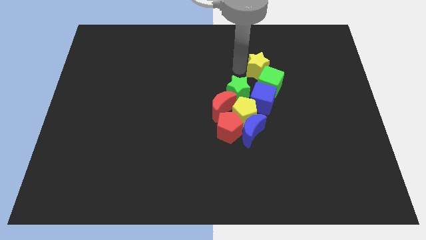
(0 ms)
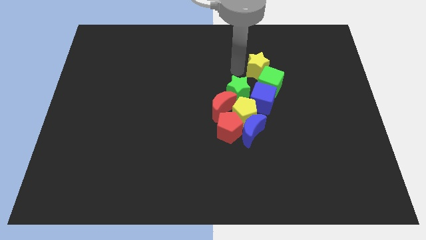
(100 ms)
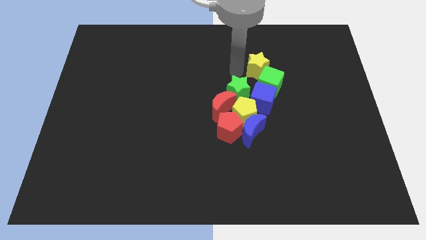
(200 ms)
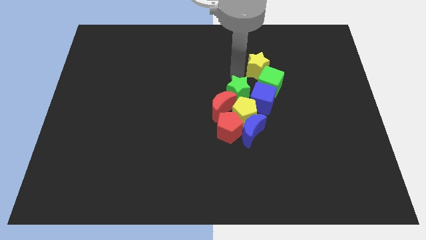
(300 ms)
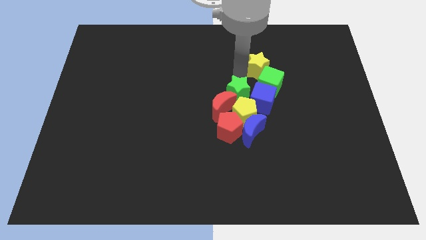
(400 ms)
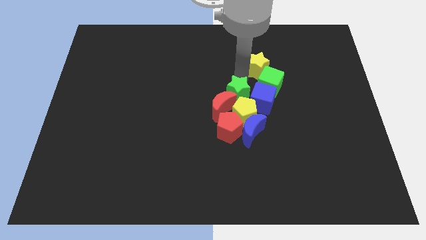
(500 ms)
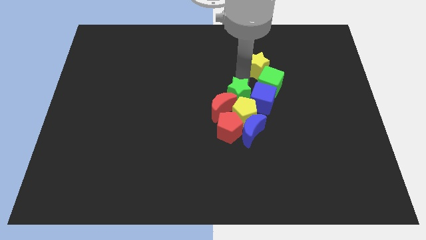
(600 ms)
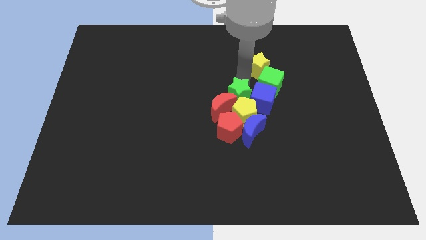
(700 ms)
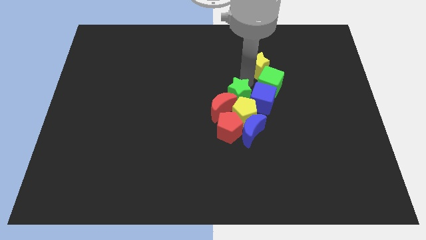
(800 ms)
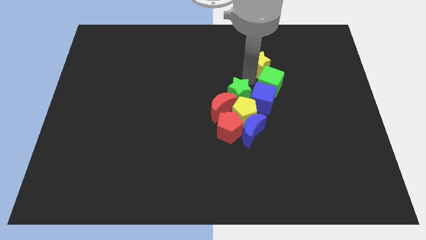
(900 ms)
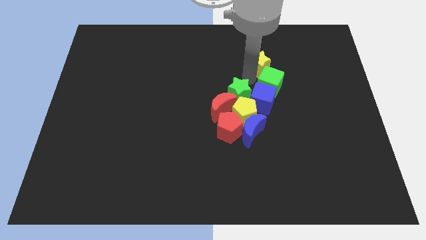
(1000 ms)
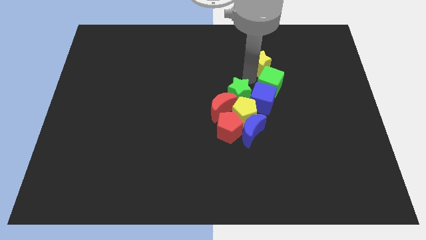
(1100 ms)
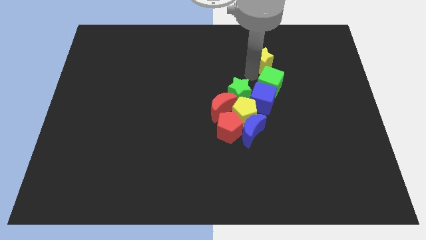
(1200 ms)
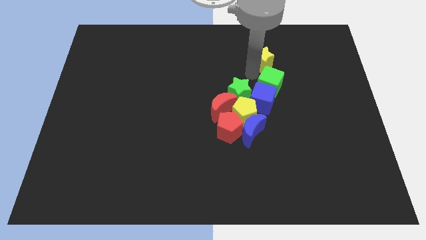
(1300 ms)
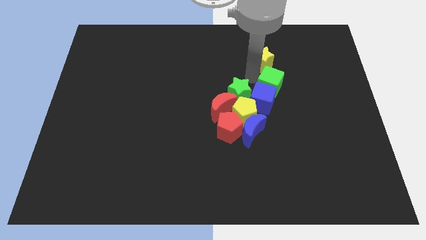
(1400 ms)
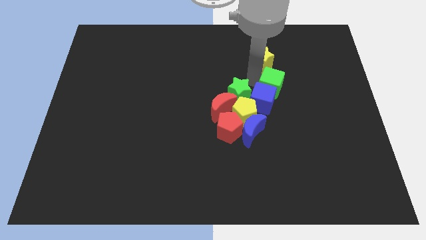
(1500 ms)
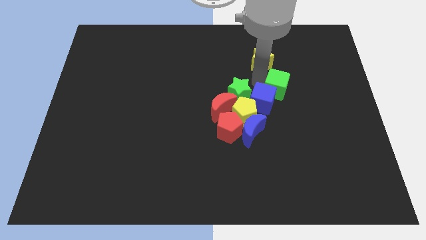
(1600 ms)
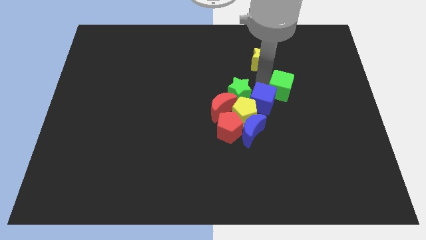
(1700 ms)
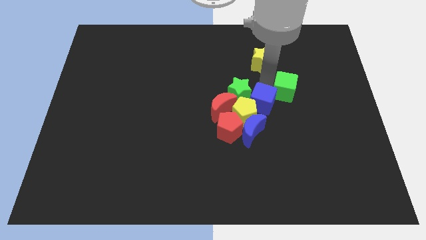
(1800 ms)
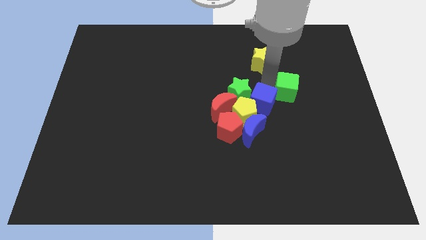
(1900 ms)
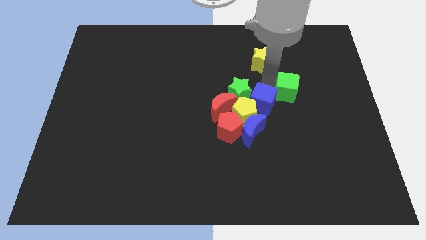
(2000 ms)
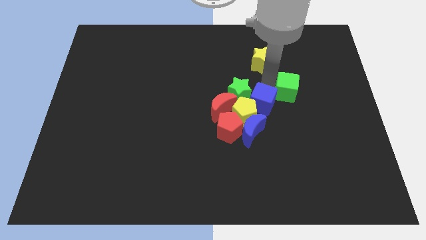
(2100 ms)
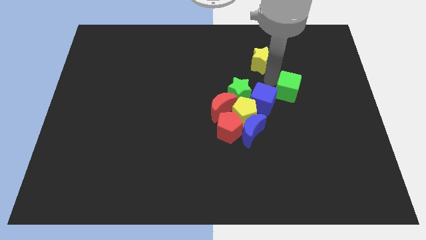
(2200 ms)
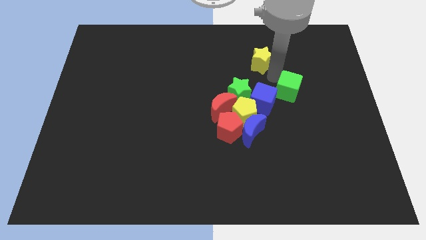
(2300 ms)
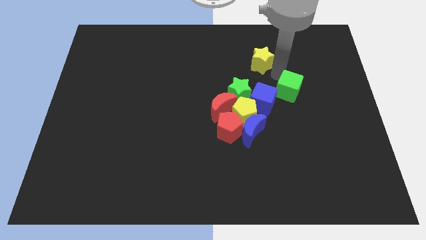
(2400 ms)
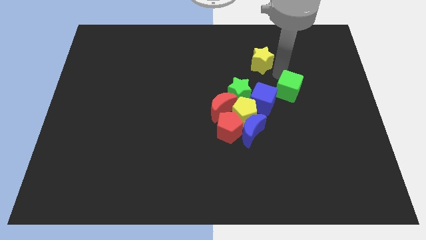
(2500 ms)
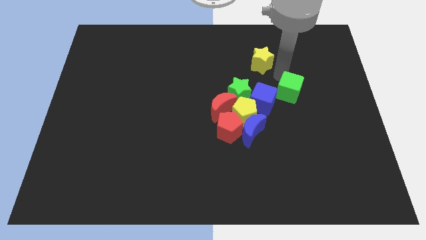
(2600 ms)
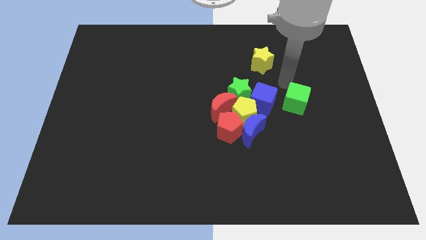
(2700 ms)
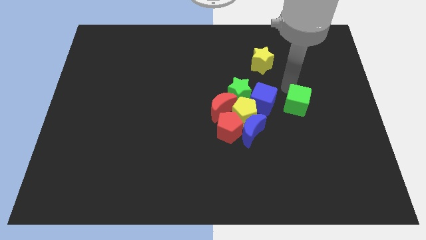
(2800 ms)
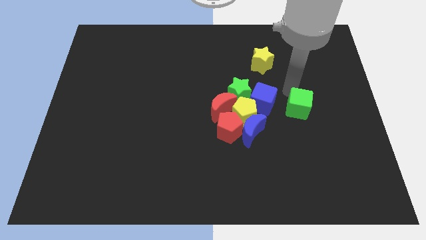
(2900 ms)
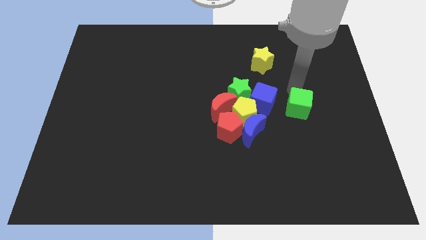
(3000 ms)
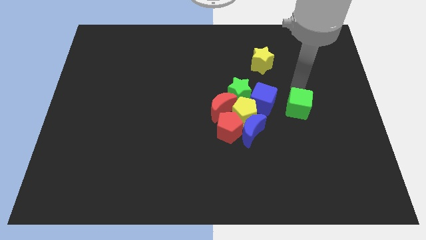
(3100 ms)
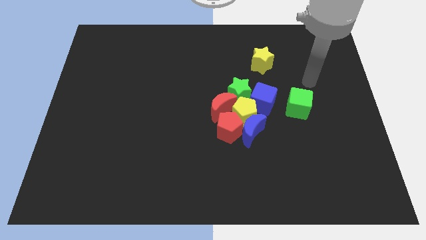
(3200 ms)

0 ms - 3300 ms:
push the green cube to the right side of the blue cube

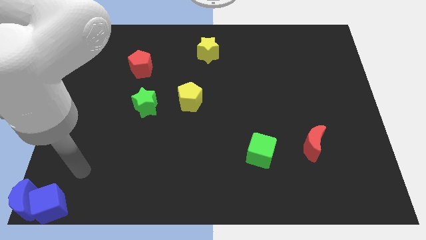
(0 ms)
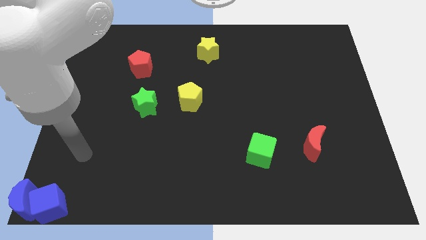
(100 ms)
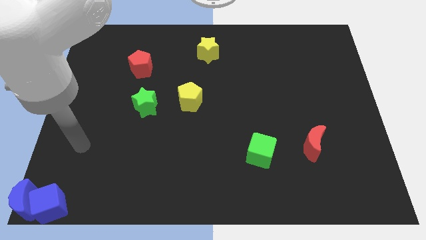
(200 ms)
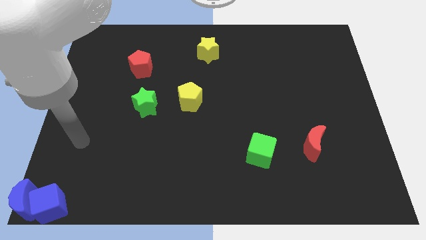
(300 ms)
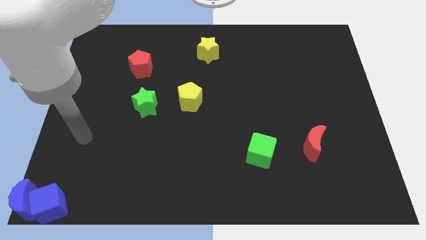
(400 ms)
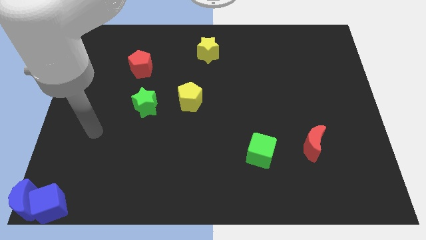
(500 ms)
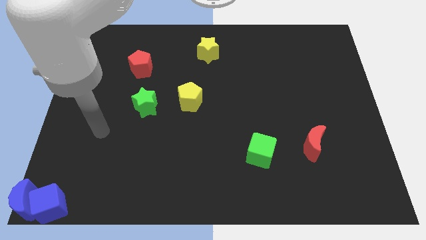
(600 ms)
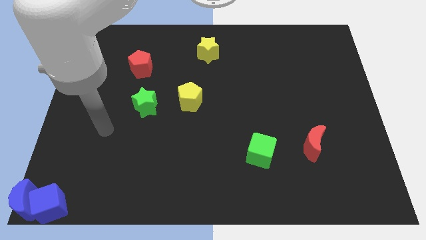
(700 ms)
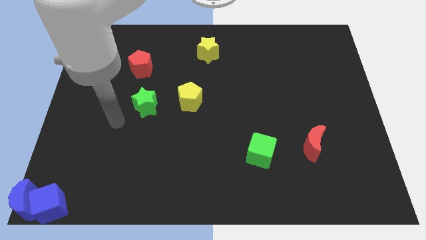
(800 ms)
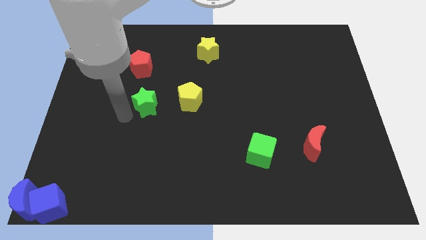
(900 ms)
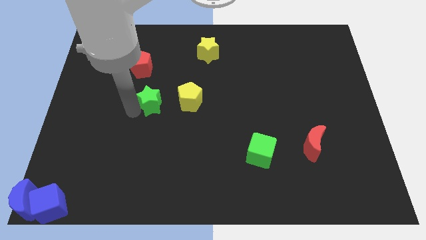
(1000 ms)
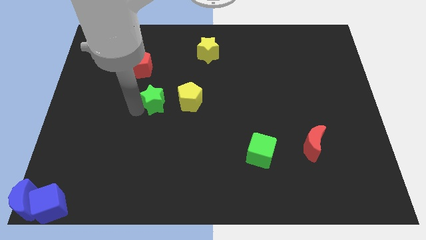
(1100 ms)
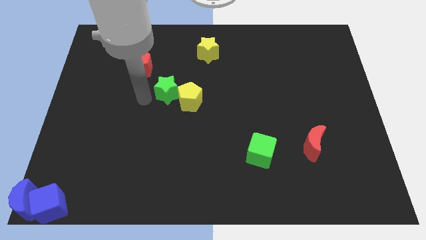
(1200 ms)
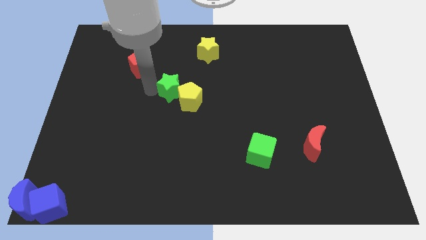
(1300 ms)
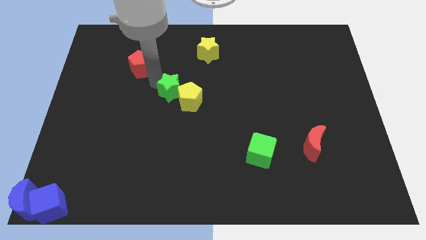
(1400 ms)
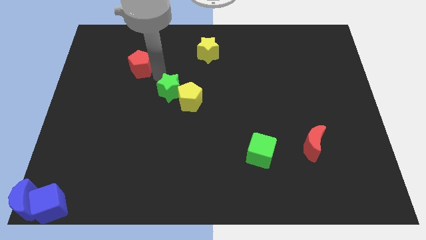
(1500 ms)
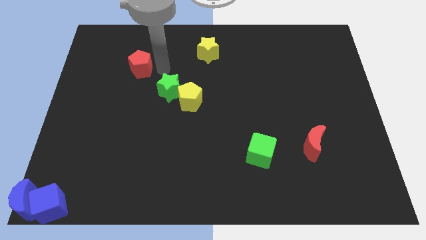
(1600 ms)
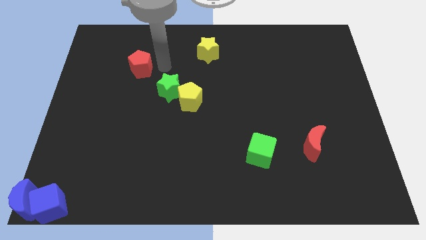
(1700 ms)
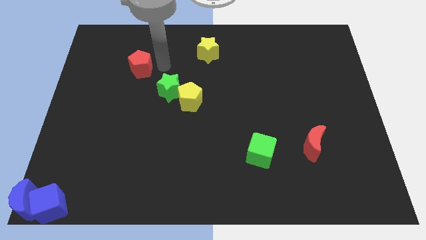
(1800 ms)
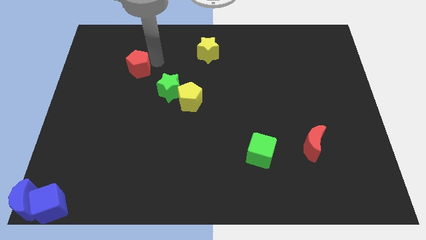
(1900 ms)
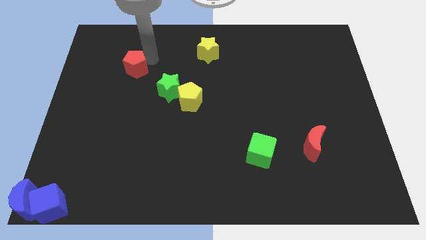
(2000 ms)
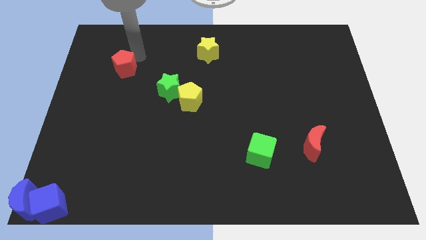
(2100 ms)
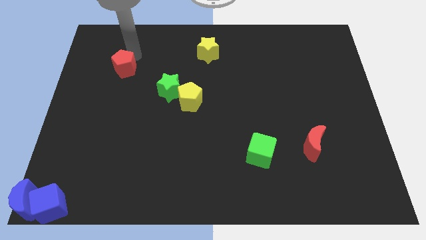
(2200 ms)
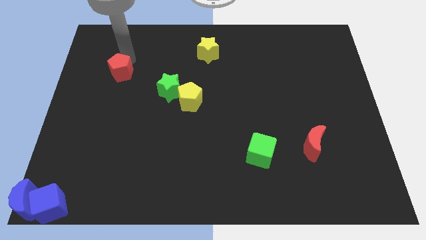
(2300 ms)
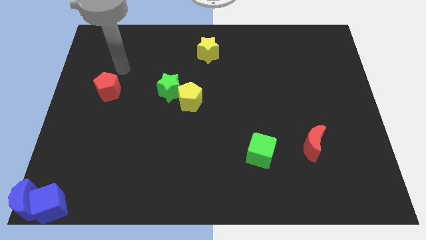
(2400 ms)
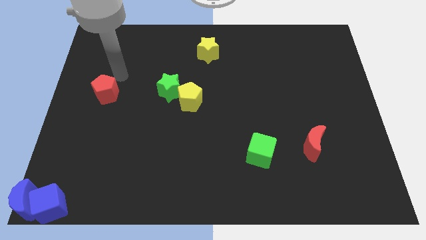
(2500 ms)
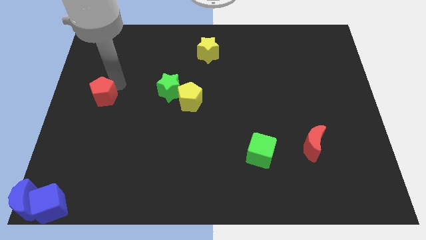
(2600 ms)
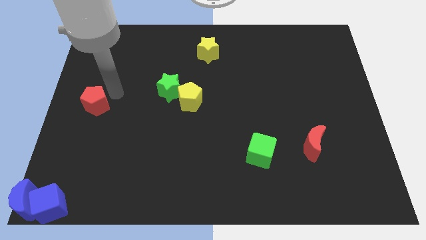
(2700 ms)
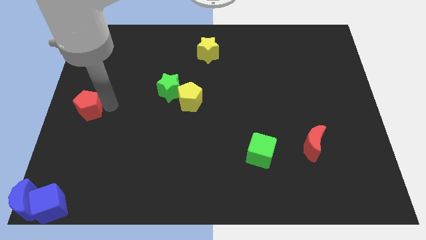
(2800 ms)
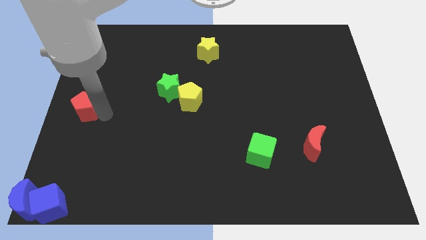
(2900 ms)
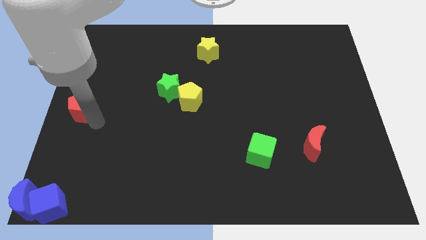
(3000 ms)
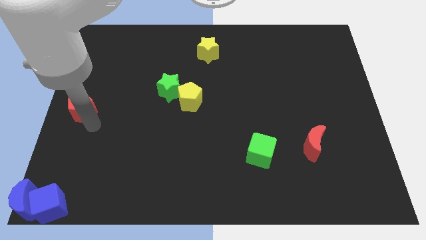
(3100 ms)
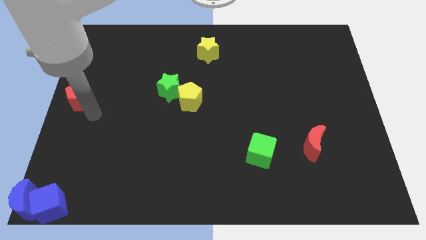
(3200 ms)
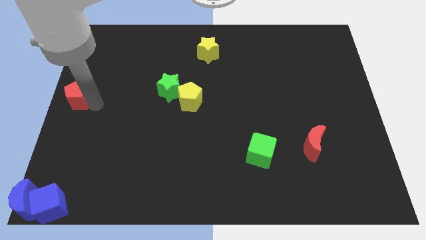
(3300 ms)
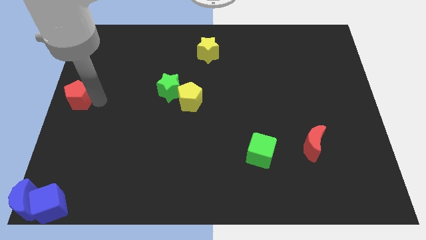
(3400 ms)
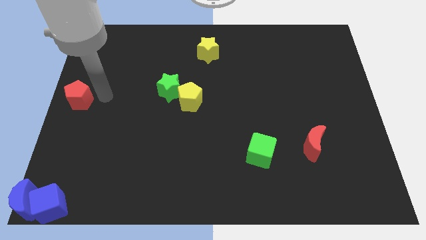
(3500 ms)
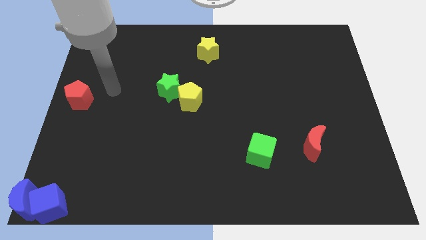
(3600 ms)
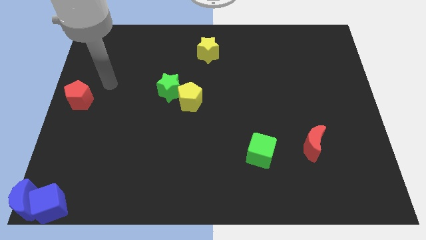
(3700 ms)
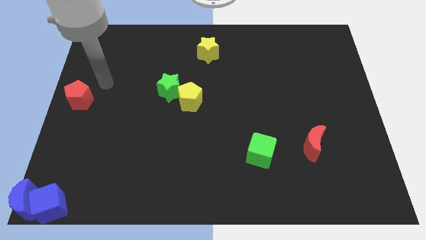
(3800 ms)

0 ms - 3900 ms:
move the red pentagon to the left center of the board

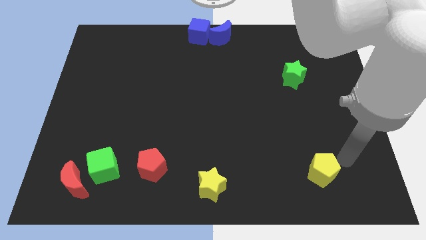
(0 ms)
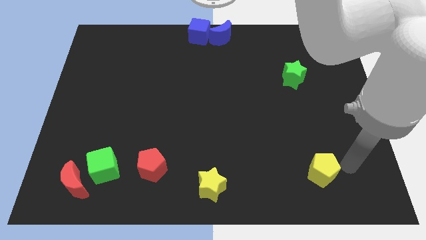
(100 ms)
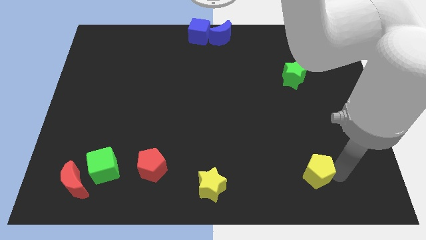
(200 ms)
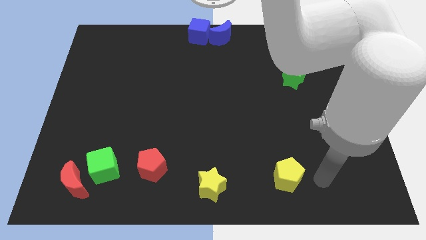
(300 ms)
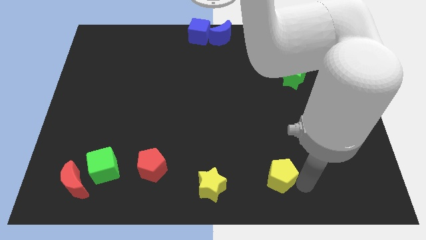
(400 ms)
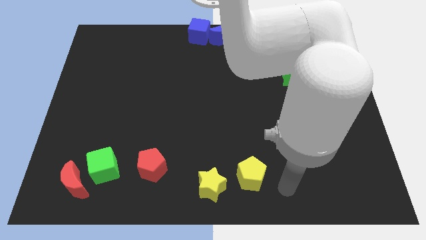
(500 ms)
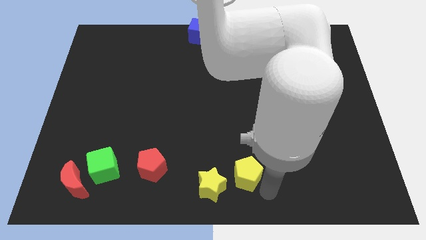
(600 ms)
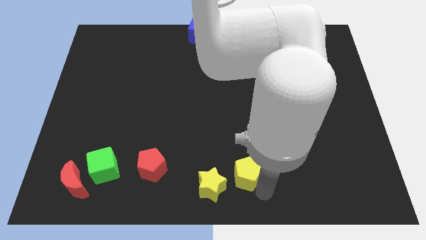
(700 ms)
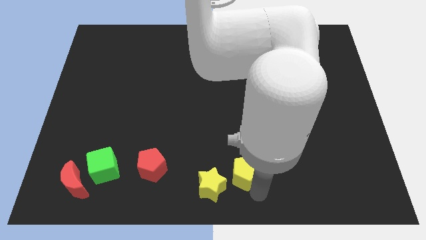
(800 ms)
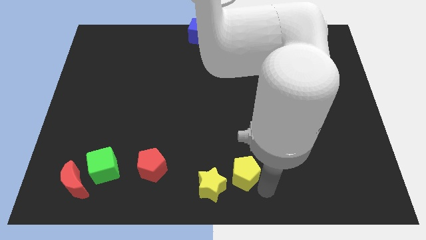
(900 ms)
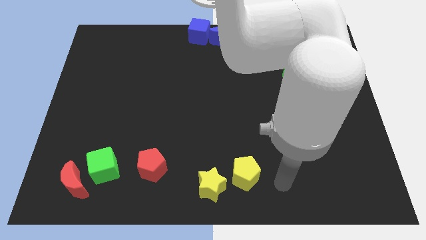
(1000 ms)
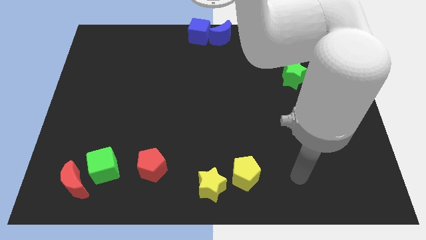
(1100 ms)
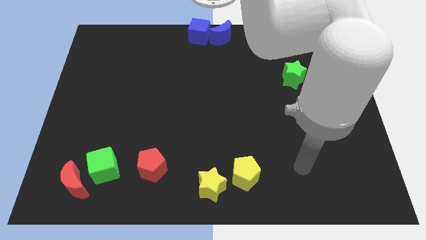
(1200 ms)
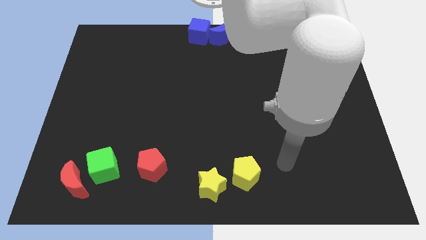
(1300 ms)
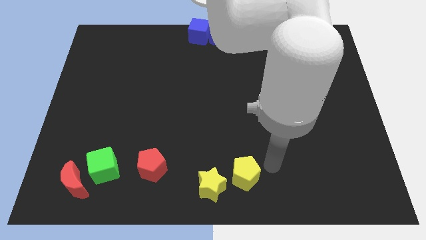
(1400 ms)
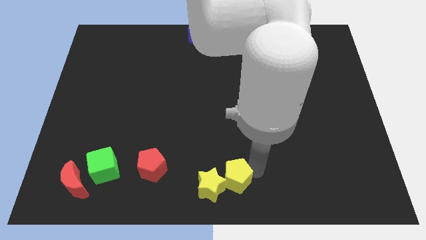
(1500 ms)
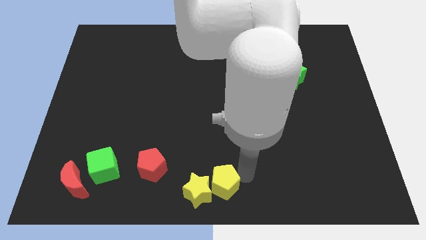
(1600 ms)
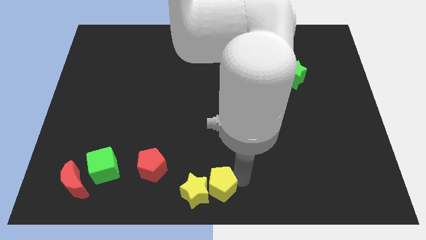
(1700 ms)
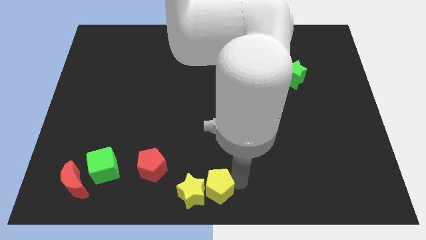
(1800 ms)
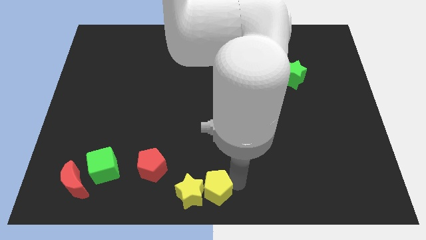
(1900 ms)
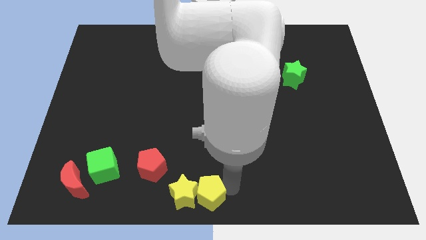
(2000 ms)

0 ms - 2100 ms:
push the yellow pentagon into the yellow star
